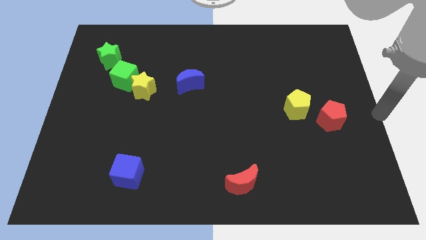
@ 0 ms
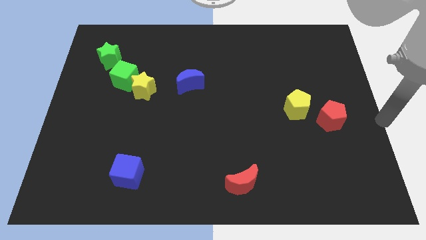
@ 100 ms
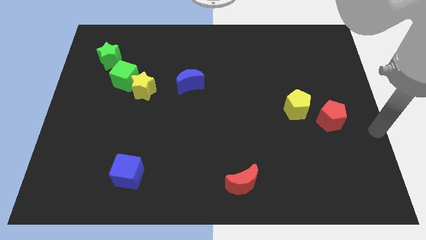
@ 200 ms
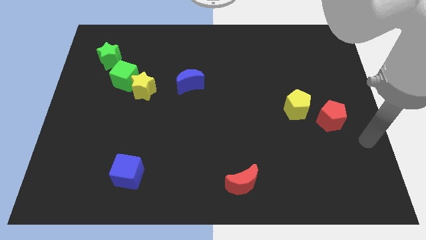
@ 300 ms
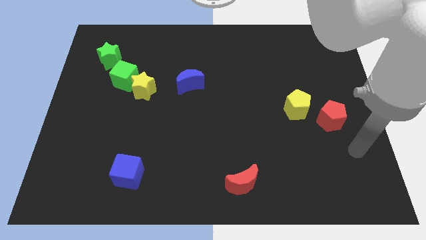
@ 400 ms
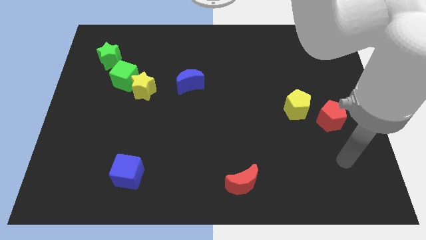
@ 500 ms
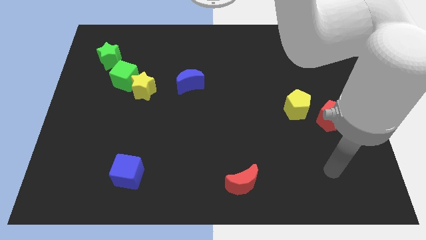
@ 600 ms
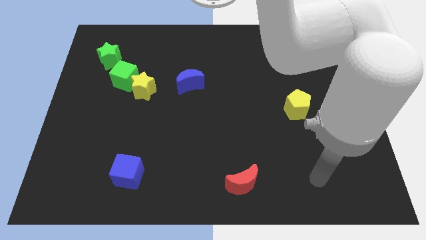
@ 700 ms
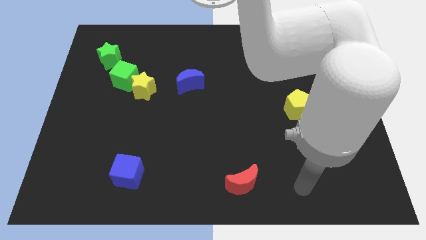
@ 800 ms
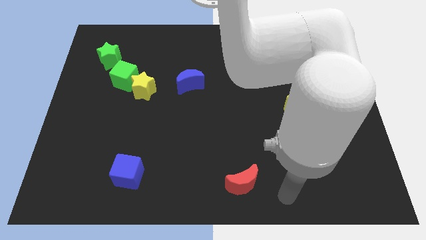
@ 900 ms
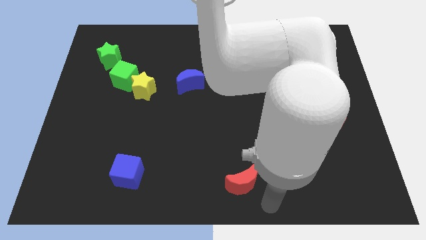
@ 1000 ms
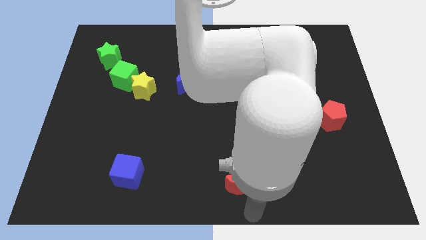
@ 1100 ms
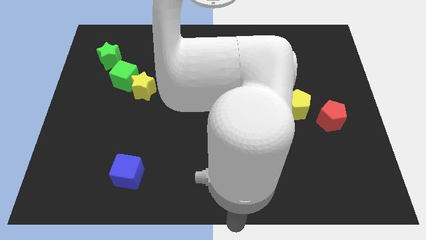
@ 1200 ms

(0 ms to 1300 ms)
move your arm to the bottom of the red crescent

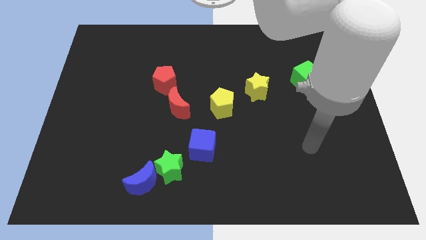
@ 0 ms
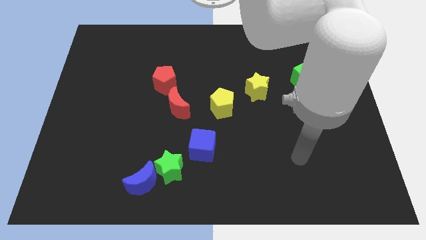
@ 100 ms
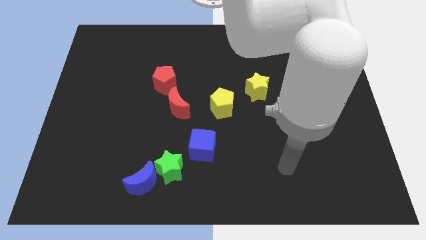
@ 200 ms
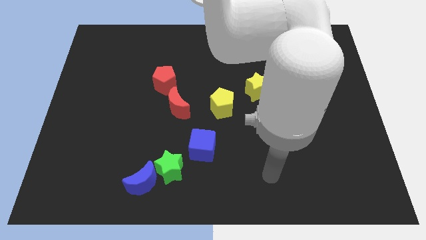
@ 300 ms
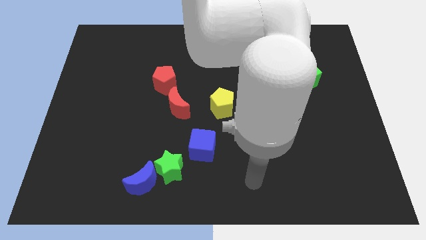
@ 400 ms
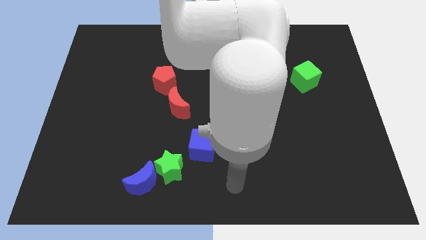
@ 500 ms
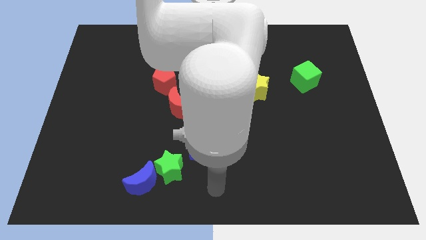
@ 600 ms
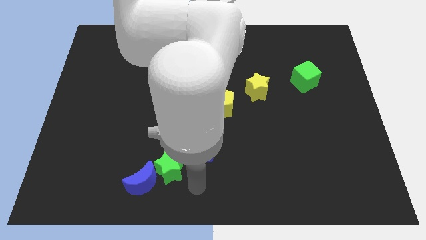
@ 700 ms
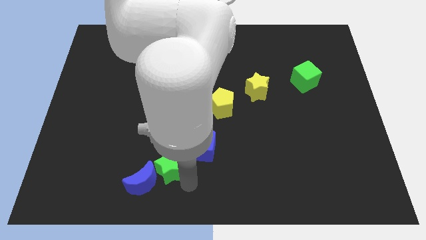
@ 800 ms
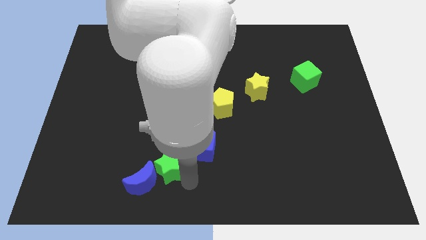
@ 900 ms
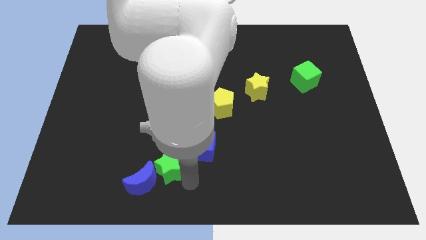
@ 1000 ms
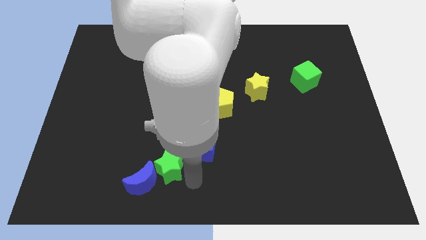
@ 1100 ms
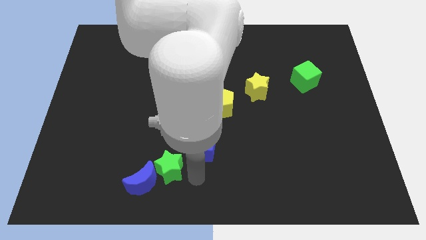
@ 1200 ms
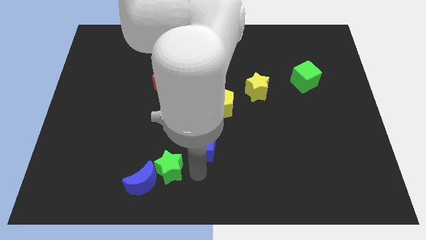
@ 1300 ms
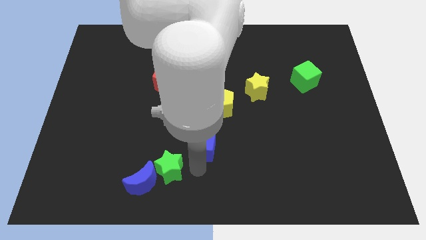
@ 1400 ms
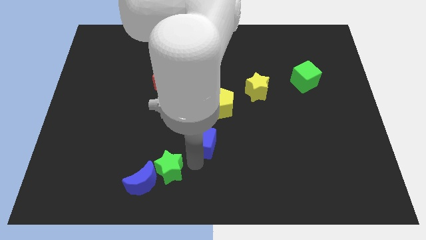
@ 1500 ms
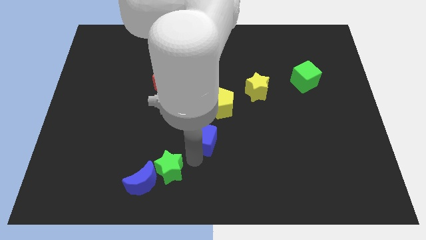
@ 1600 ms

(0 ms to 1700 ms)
place your arm down to the blue cube

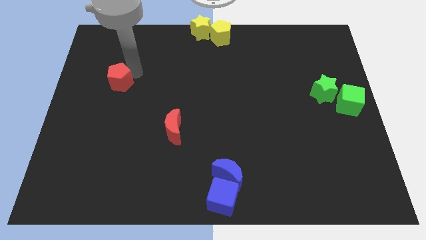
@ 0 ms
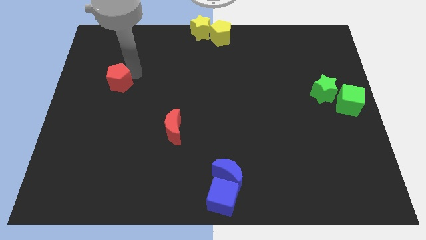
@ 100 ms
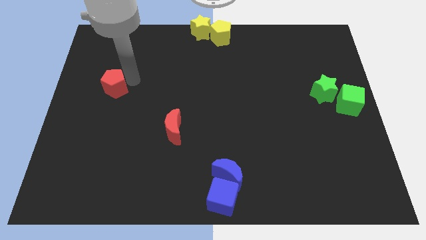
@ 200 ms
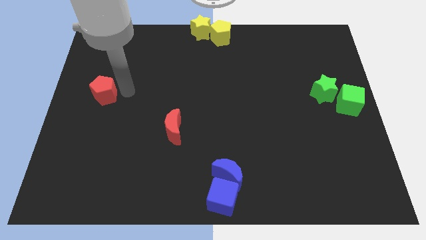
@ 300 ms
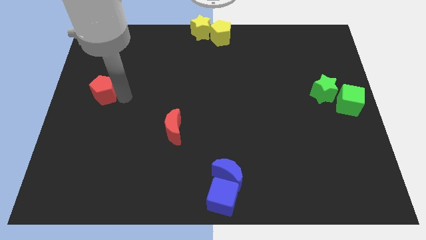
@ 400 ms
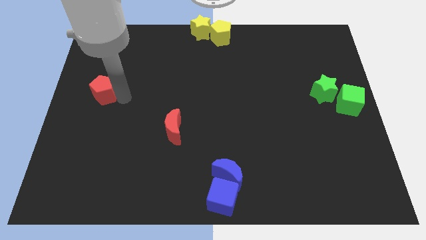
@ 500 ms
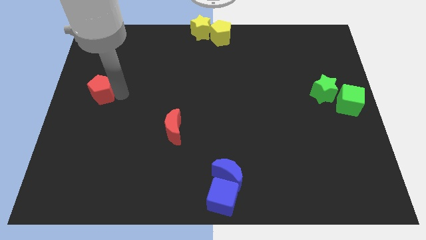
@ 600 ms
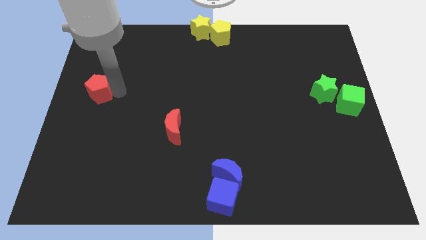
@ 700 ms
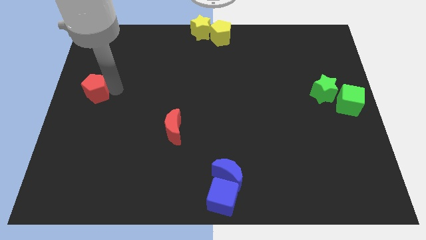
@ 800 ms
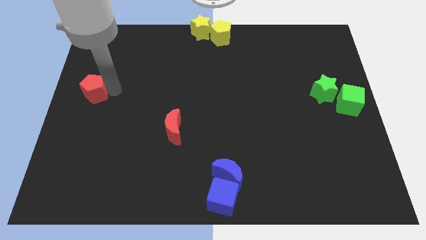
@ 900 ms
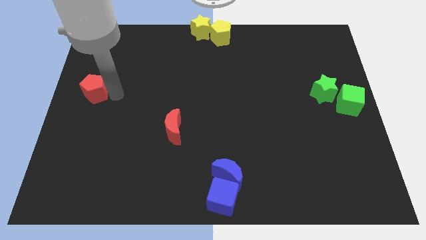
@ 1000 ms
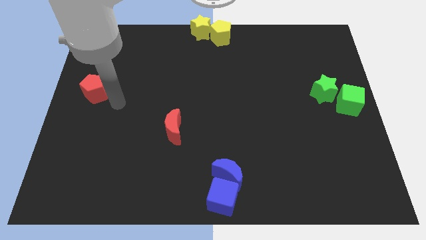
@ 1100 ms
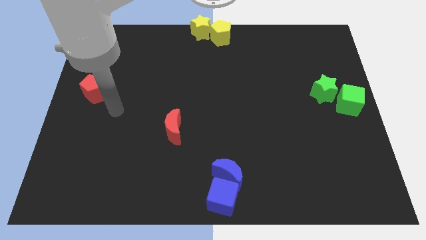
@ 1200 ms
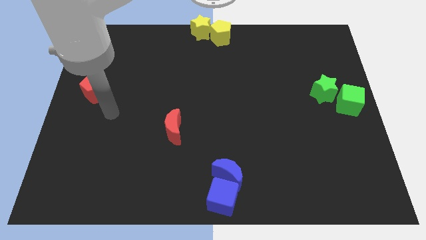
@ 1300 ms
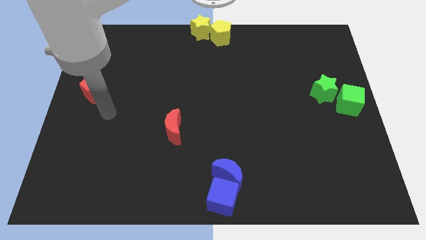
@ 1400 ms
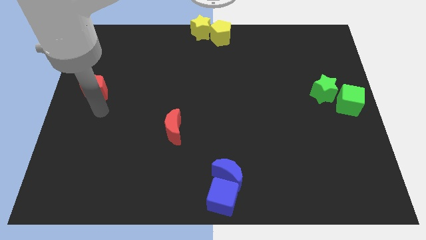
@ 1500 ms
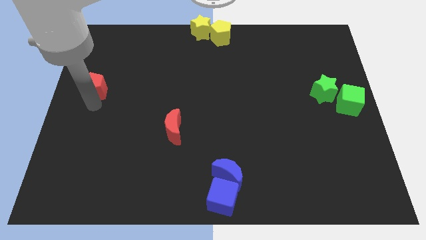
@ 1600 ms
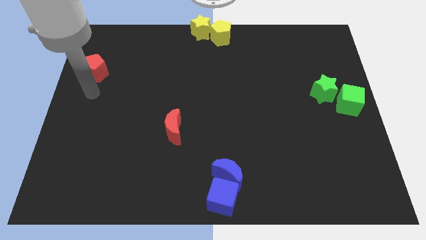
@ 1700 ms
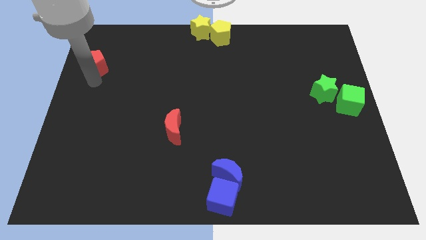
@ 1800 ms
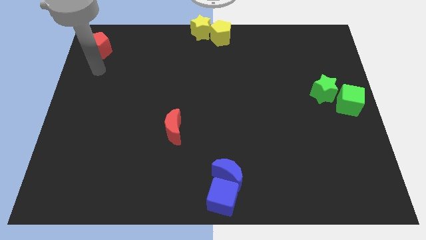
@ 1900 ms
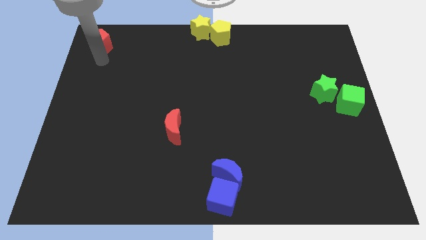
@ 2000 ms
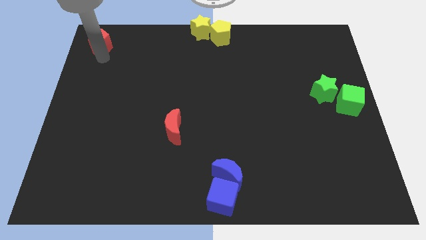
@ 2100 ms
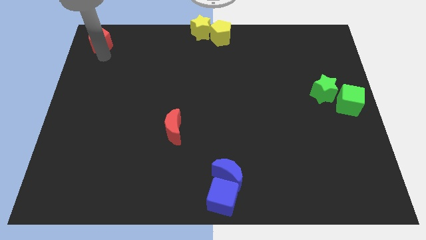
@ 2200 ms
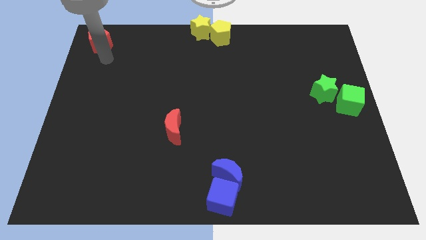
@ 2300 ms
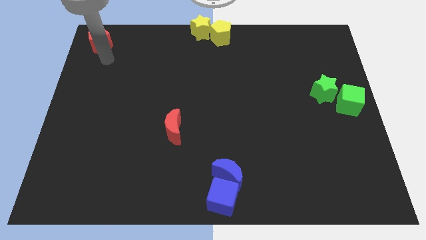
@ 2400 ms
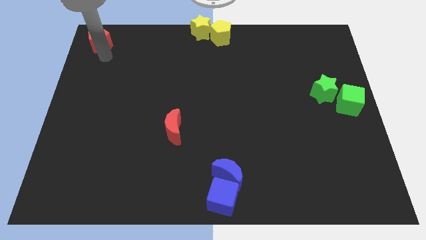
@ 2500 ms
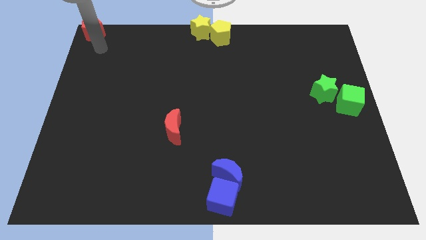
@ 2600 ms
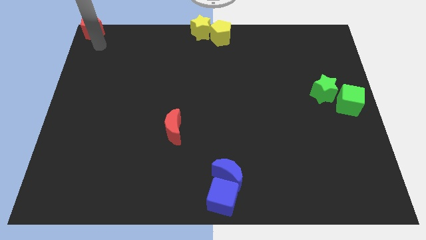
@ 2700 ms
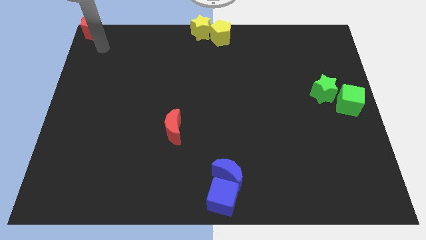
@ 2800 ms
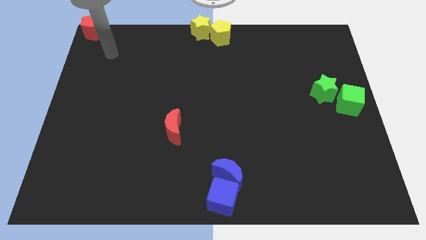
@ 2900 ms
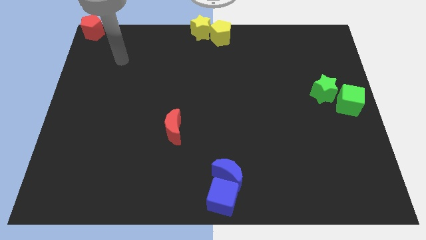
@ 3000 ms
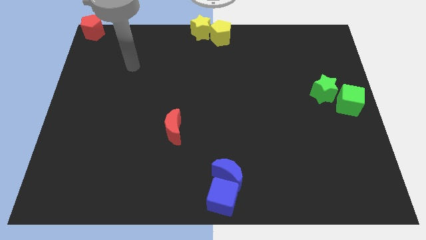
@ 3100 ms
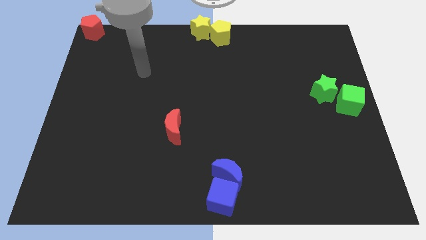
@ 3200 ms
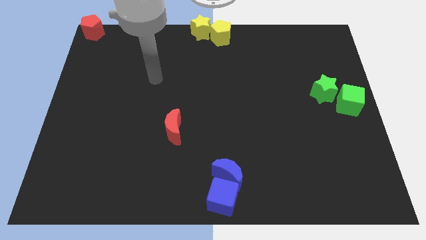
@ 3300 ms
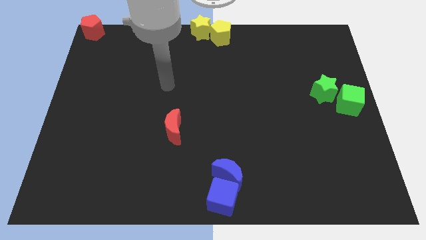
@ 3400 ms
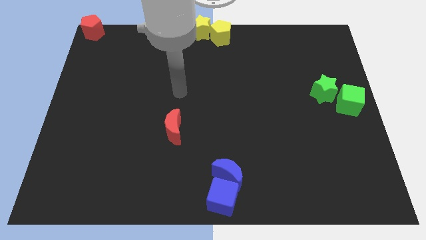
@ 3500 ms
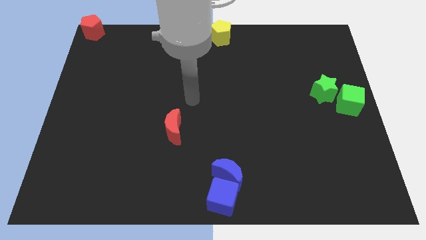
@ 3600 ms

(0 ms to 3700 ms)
move the red pentagon at the top left corner of the board

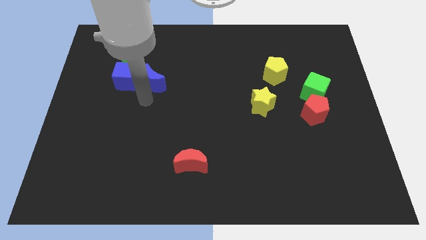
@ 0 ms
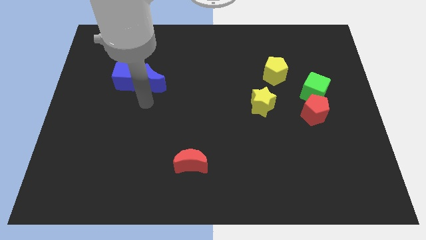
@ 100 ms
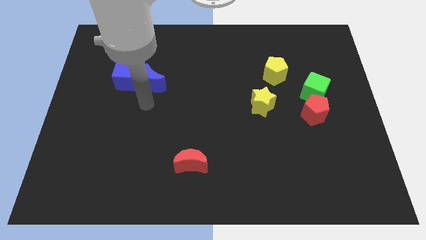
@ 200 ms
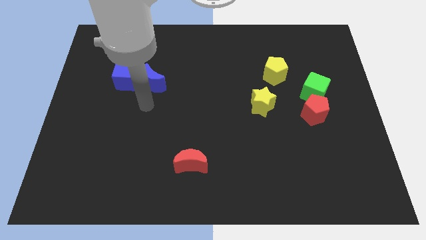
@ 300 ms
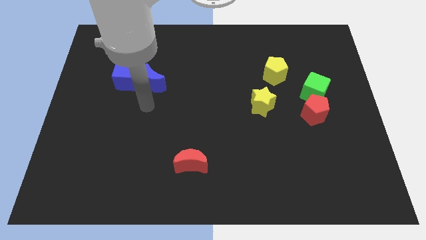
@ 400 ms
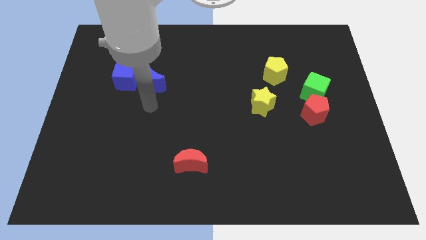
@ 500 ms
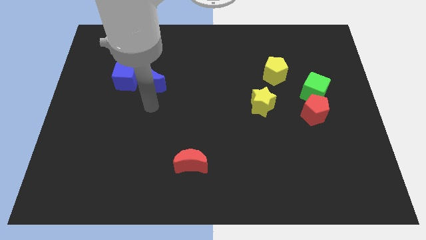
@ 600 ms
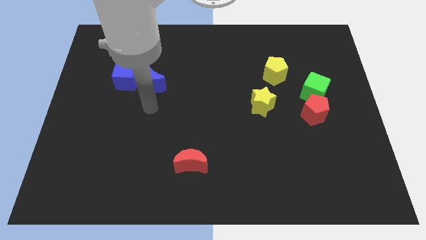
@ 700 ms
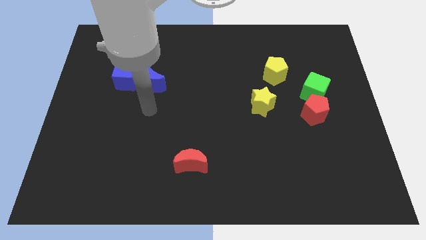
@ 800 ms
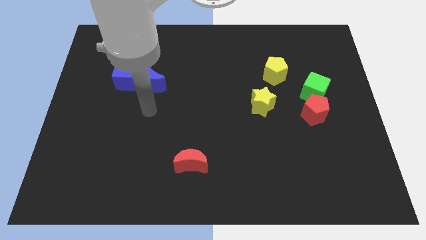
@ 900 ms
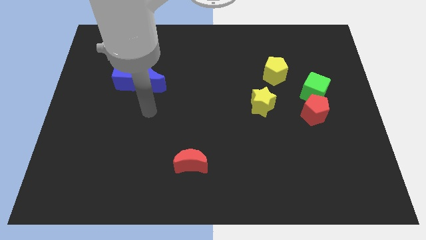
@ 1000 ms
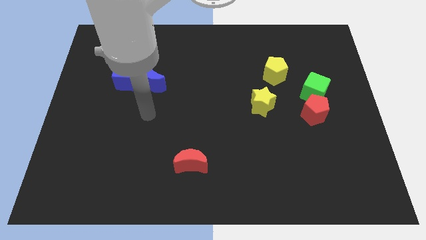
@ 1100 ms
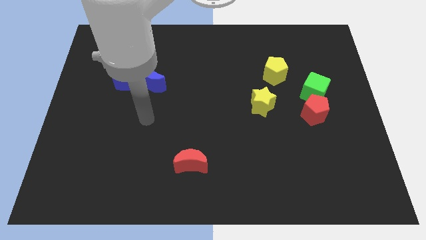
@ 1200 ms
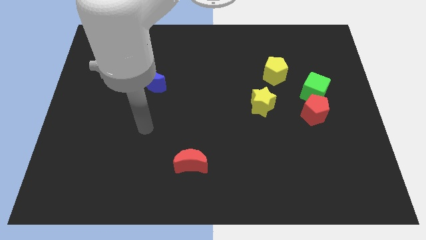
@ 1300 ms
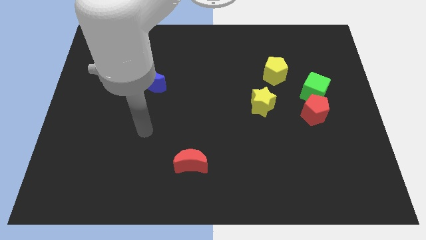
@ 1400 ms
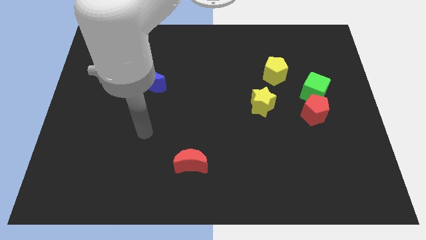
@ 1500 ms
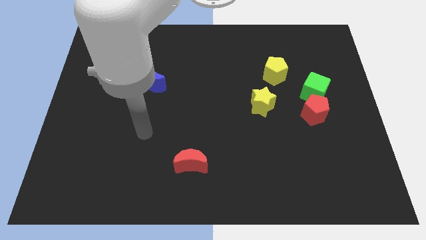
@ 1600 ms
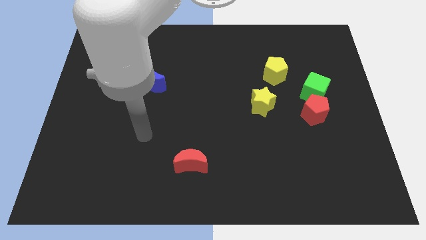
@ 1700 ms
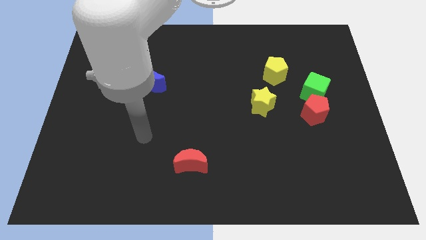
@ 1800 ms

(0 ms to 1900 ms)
move your arm away from the blue crescent

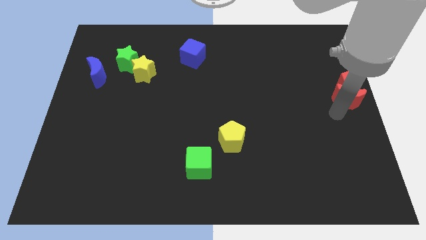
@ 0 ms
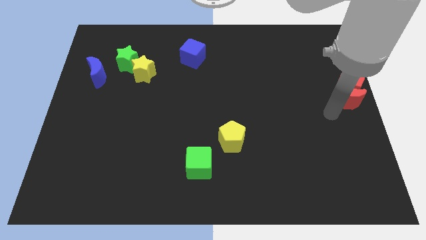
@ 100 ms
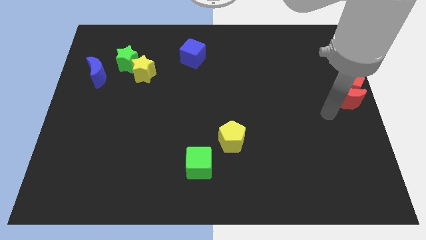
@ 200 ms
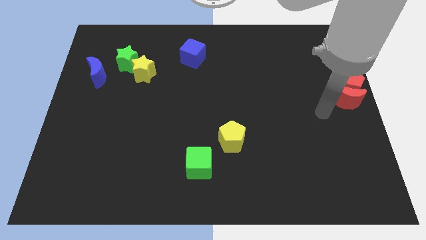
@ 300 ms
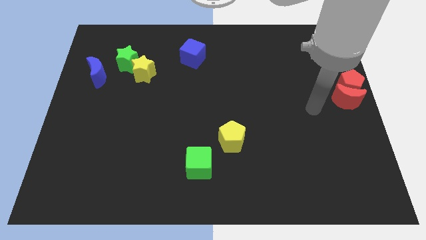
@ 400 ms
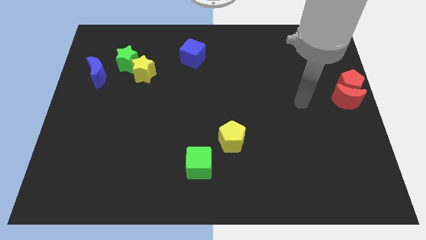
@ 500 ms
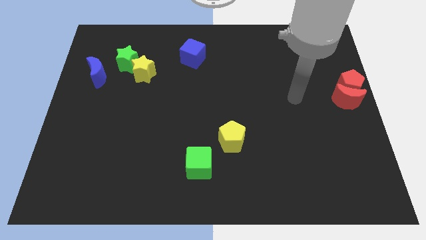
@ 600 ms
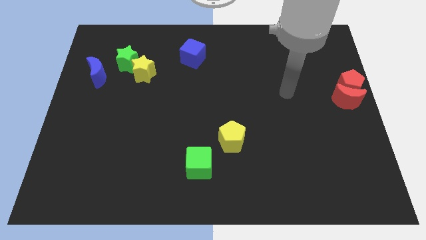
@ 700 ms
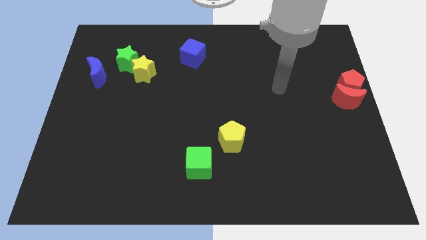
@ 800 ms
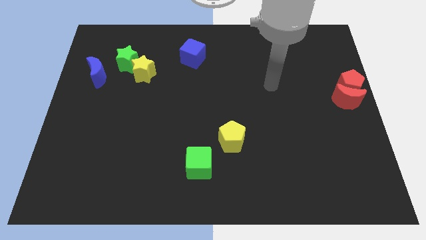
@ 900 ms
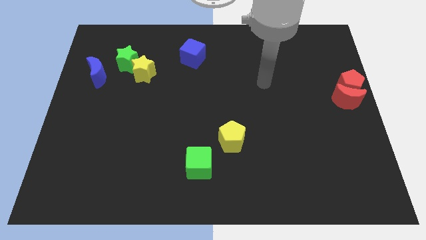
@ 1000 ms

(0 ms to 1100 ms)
move the arm away from the red moon
